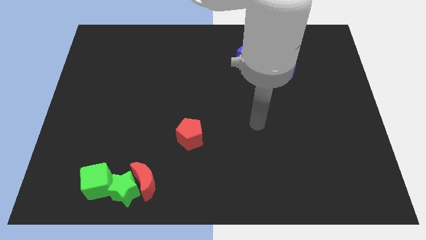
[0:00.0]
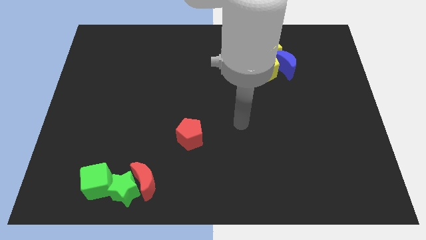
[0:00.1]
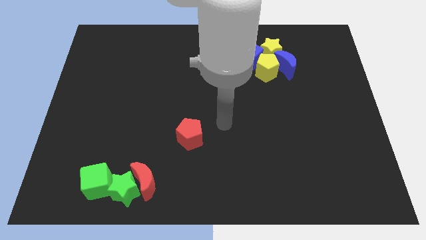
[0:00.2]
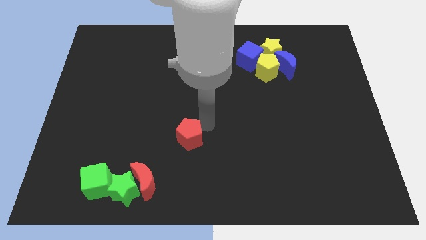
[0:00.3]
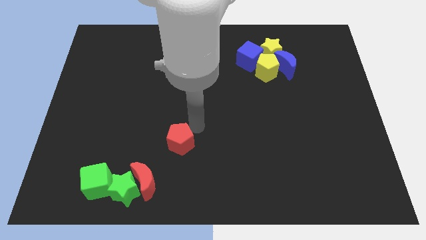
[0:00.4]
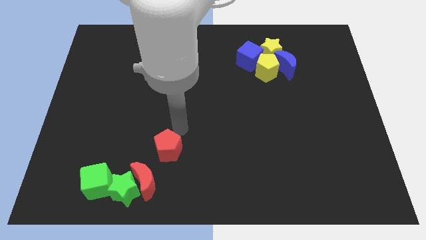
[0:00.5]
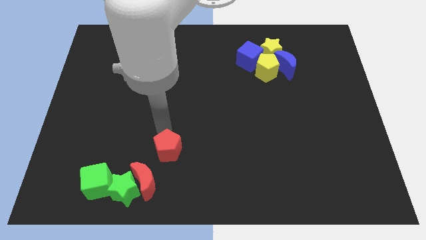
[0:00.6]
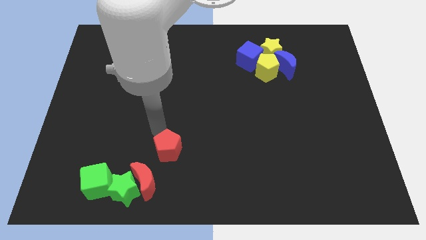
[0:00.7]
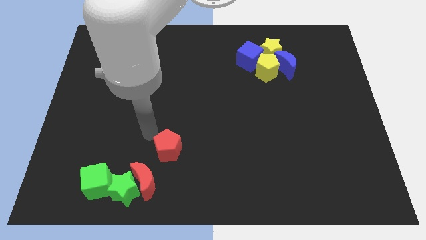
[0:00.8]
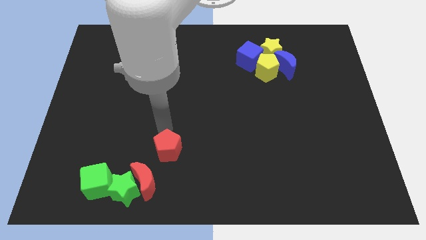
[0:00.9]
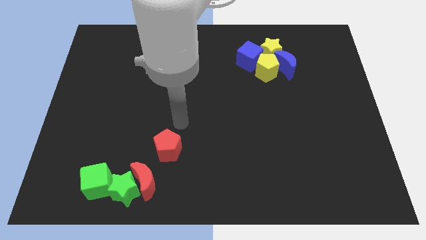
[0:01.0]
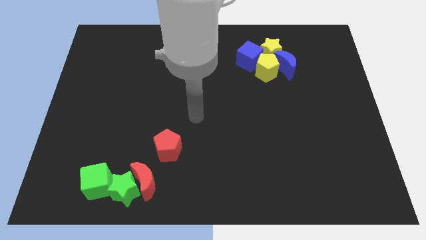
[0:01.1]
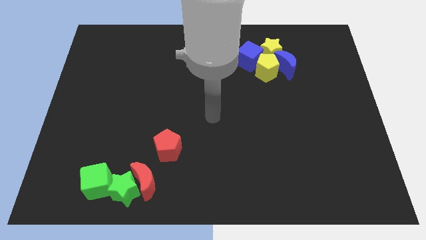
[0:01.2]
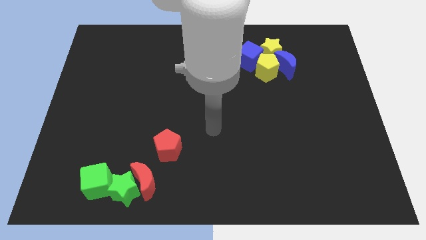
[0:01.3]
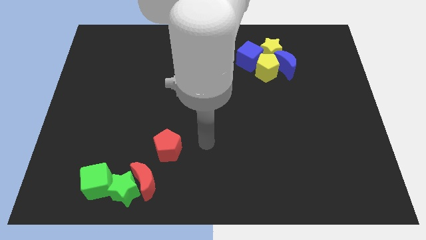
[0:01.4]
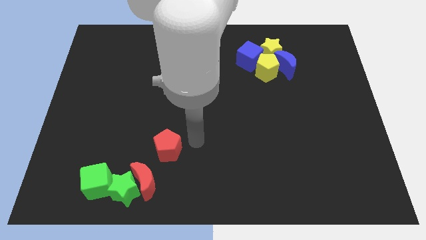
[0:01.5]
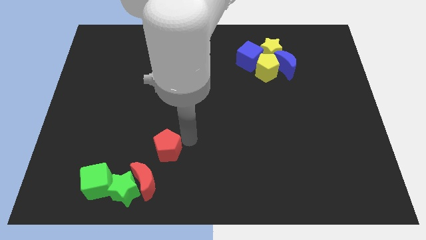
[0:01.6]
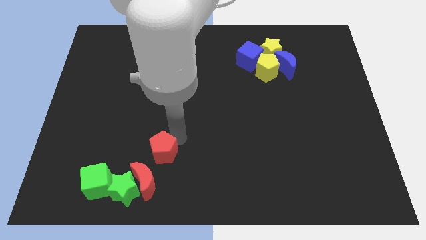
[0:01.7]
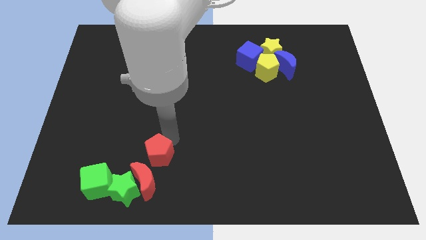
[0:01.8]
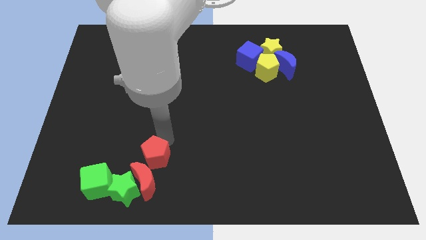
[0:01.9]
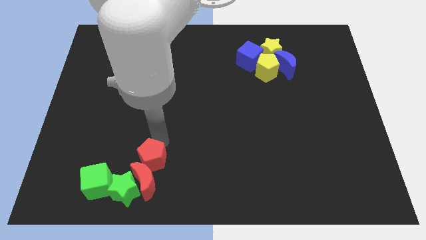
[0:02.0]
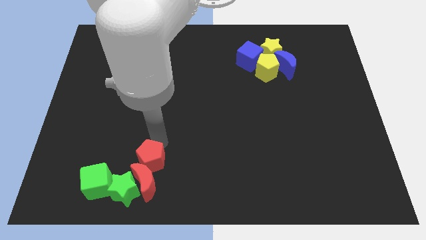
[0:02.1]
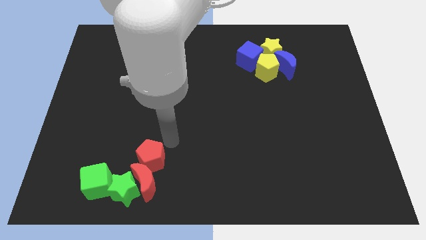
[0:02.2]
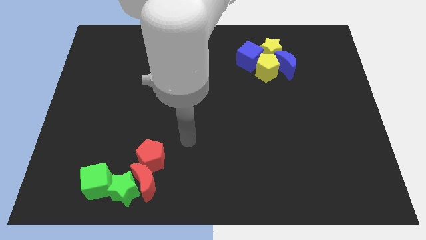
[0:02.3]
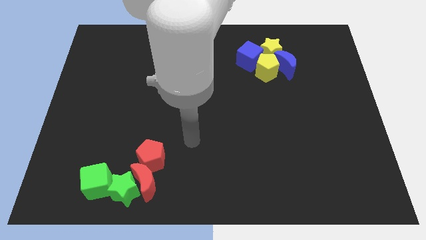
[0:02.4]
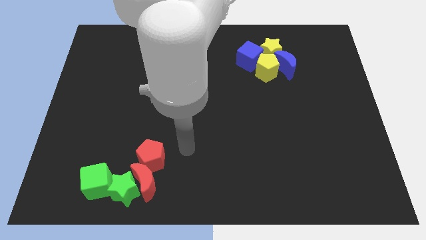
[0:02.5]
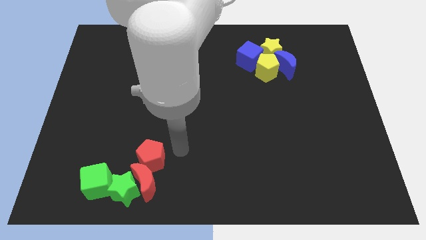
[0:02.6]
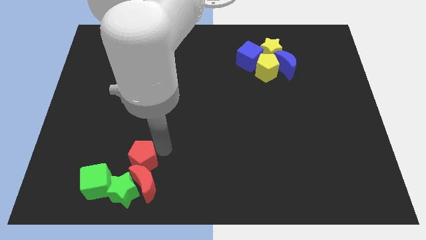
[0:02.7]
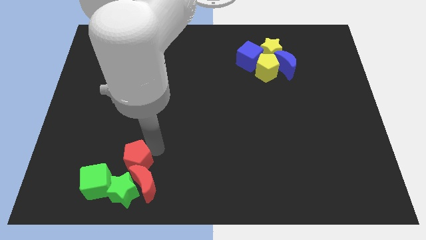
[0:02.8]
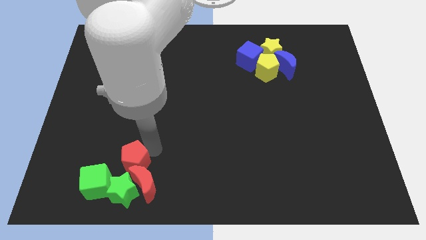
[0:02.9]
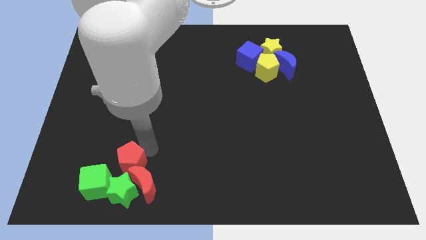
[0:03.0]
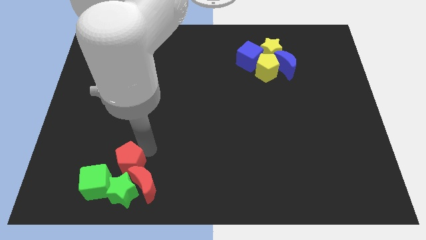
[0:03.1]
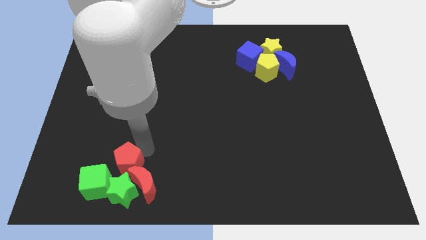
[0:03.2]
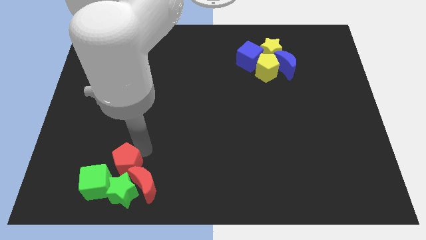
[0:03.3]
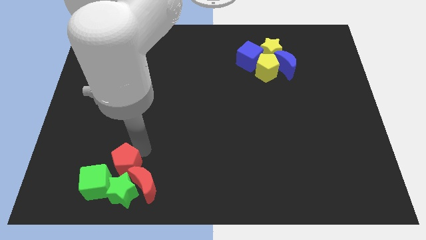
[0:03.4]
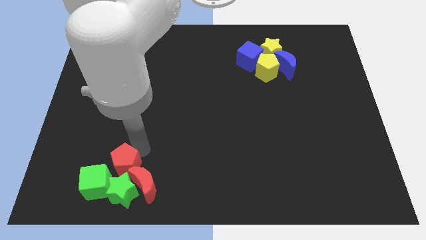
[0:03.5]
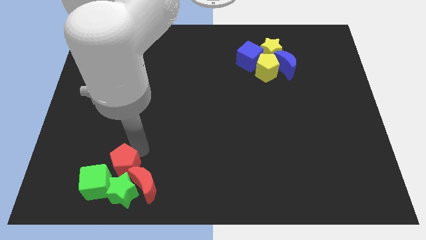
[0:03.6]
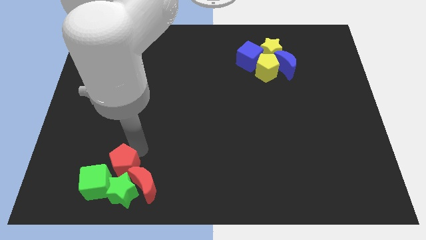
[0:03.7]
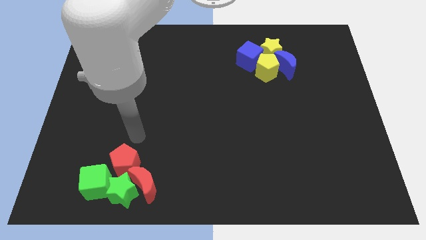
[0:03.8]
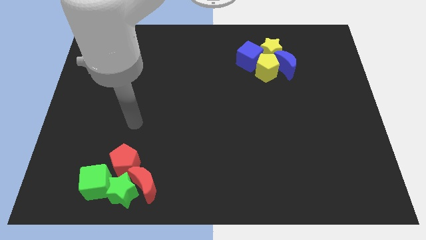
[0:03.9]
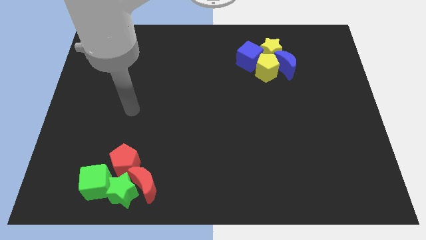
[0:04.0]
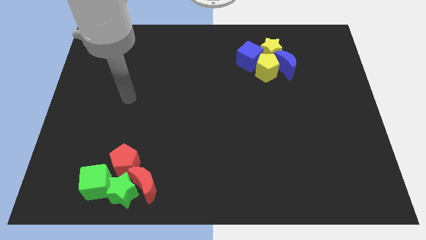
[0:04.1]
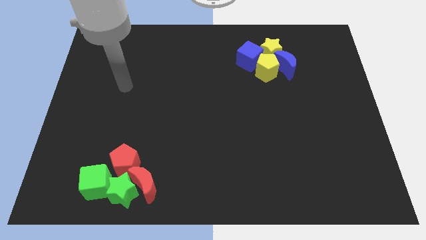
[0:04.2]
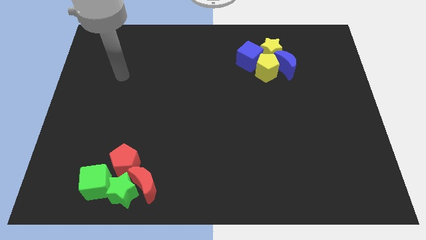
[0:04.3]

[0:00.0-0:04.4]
push the red penatgon into the group of object

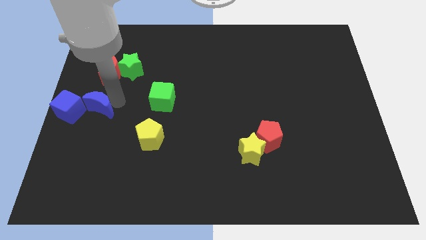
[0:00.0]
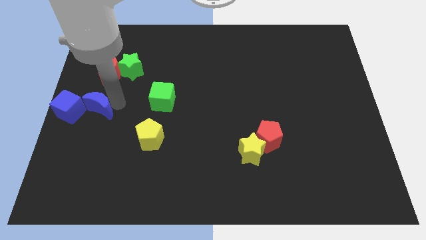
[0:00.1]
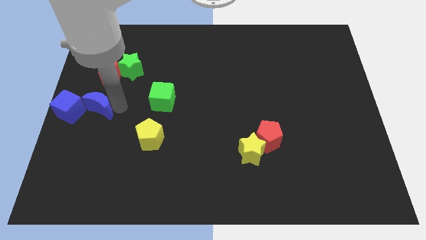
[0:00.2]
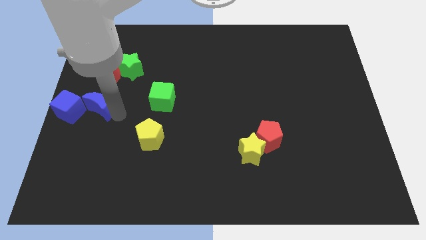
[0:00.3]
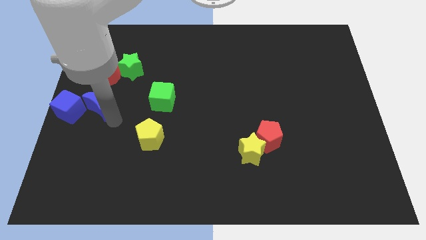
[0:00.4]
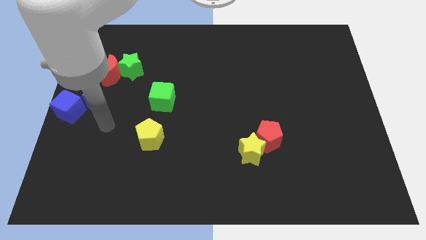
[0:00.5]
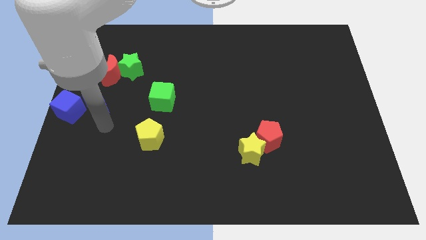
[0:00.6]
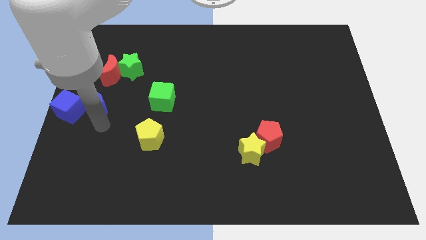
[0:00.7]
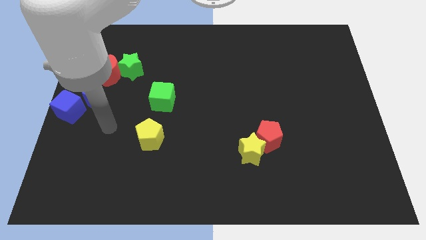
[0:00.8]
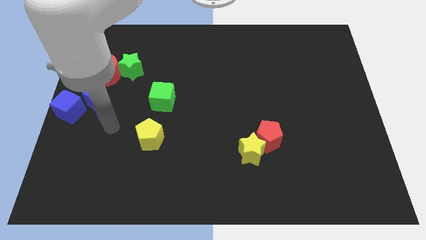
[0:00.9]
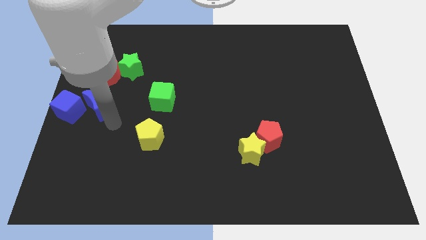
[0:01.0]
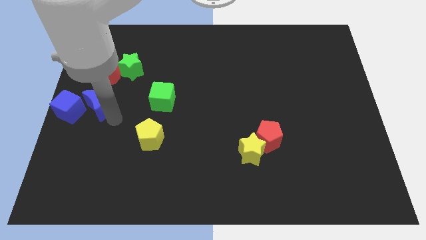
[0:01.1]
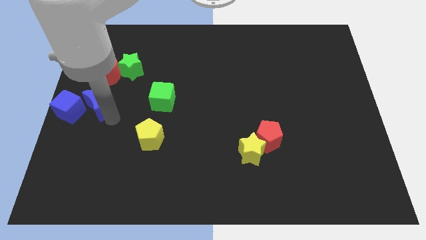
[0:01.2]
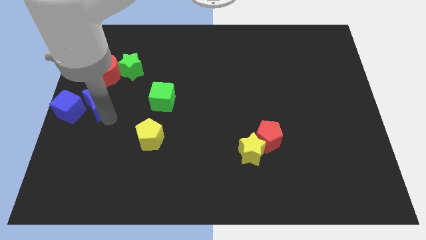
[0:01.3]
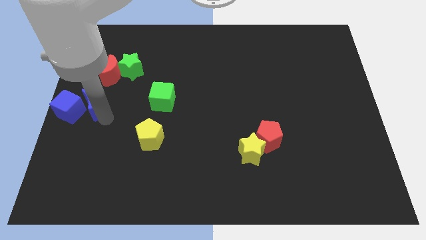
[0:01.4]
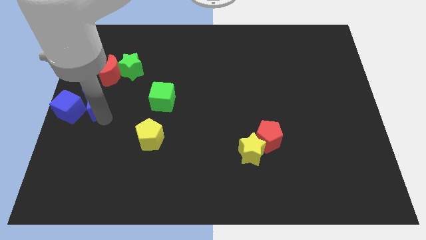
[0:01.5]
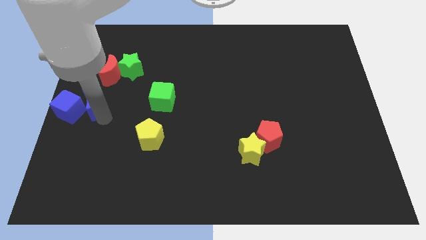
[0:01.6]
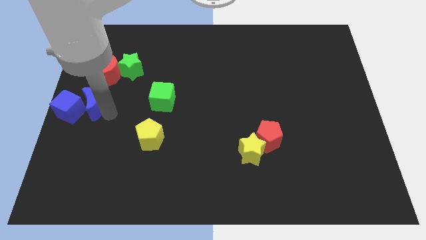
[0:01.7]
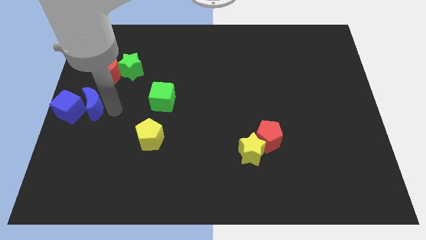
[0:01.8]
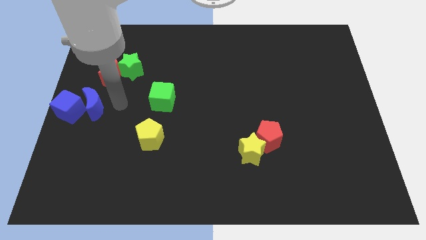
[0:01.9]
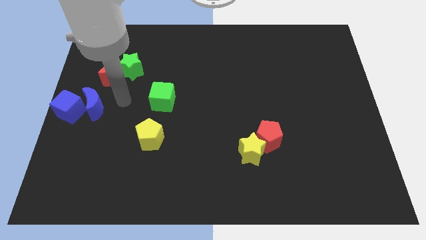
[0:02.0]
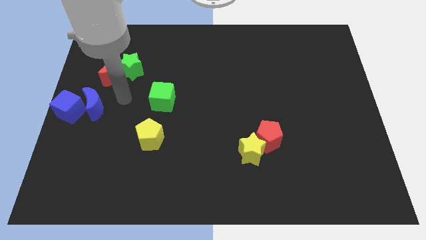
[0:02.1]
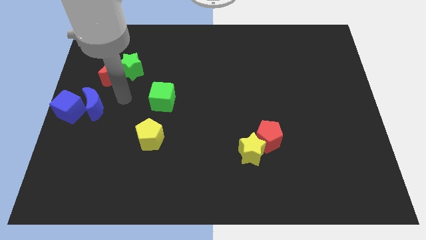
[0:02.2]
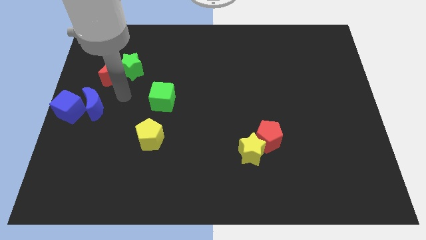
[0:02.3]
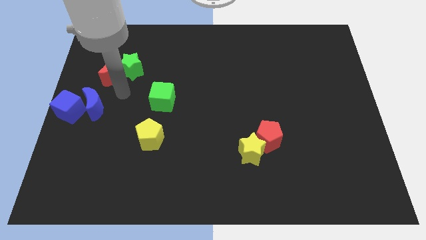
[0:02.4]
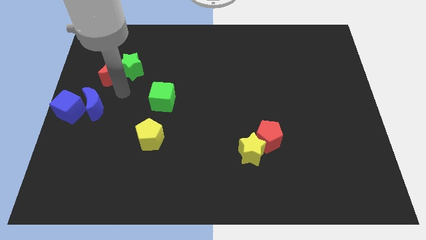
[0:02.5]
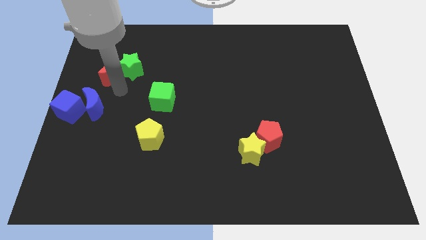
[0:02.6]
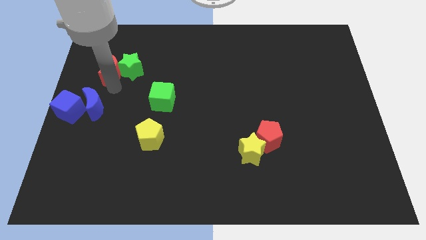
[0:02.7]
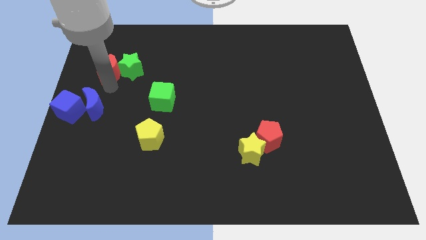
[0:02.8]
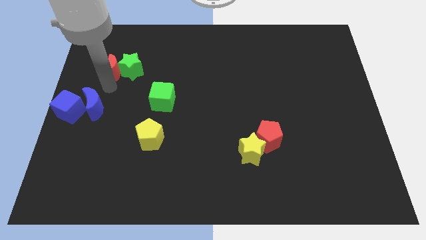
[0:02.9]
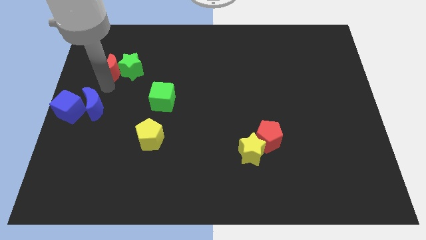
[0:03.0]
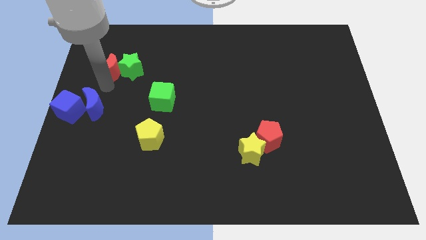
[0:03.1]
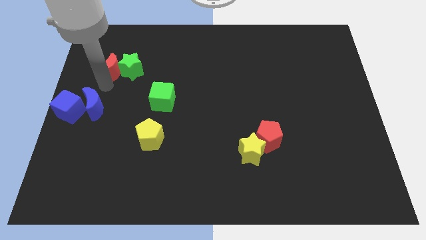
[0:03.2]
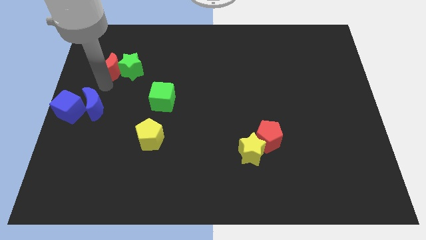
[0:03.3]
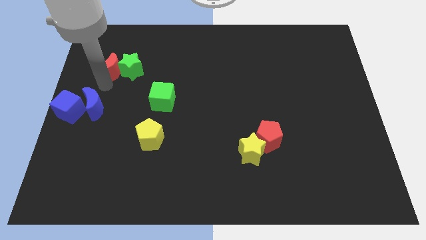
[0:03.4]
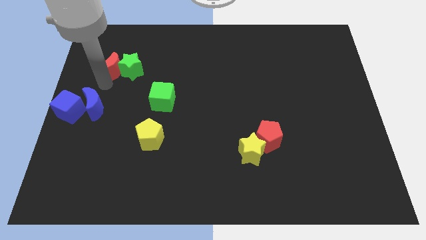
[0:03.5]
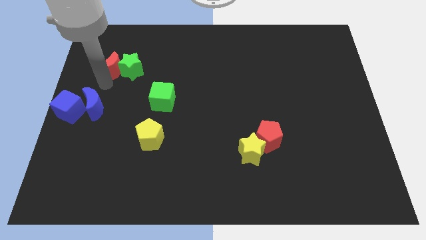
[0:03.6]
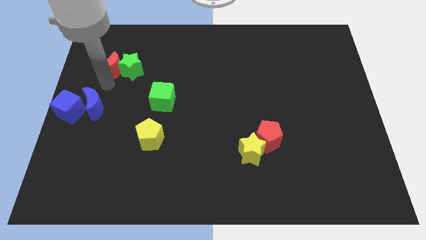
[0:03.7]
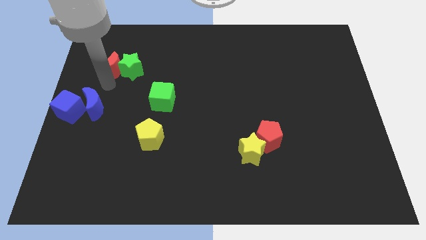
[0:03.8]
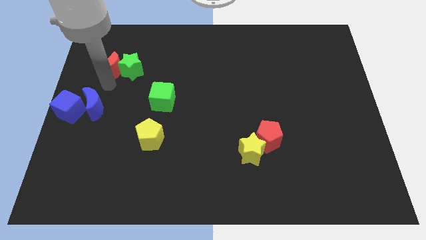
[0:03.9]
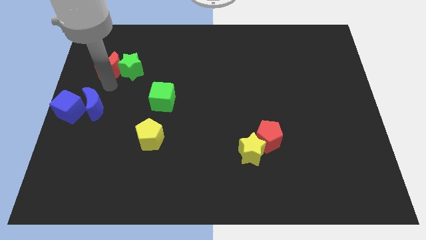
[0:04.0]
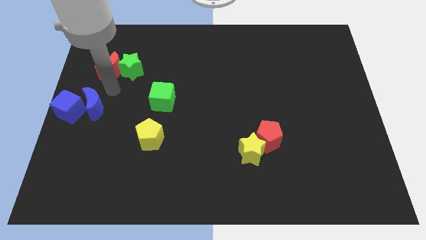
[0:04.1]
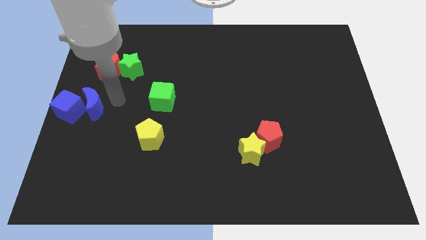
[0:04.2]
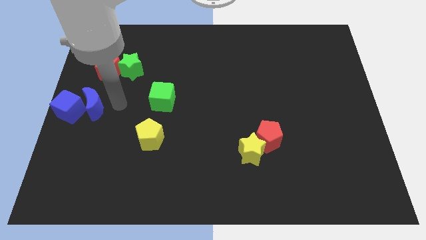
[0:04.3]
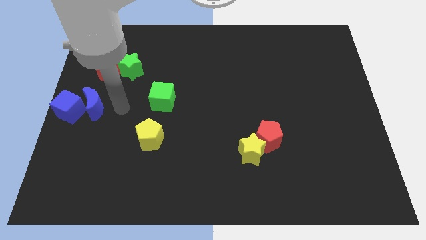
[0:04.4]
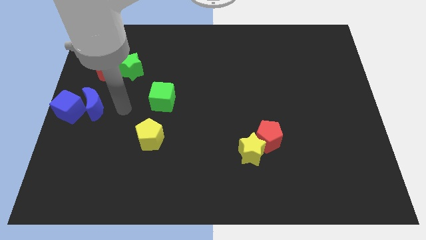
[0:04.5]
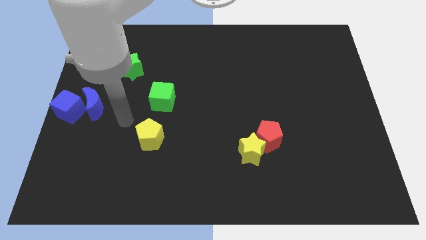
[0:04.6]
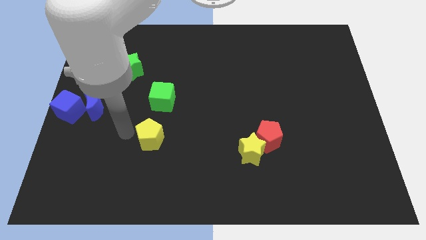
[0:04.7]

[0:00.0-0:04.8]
move crescents slightly to the left of the board
